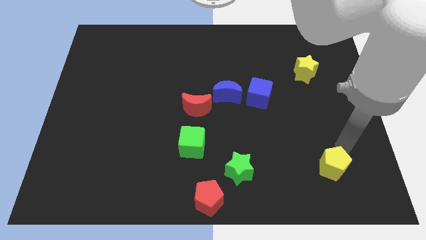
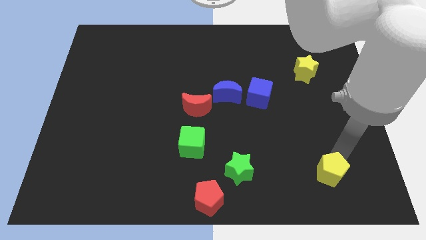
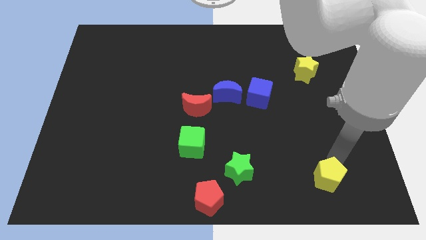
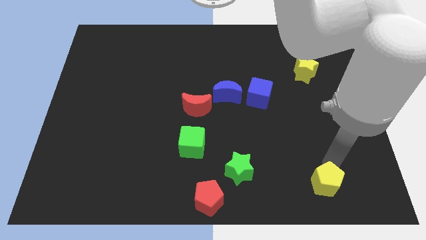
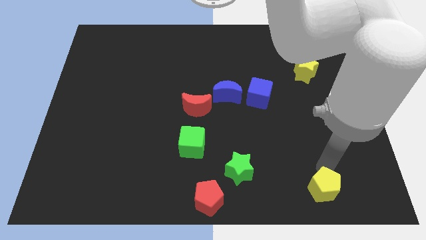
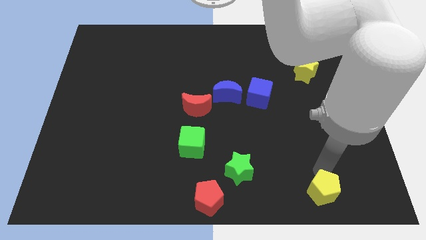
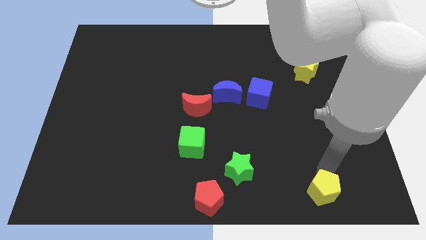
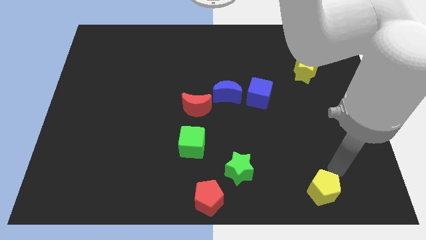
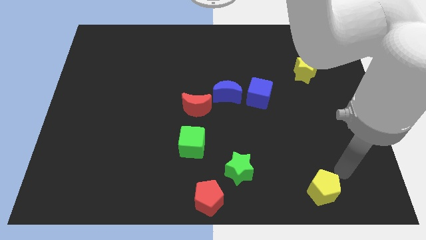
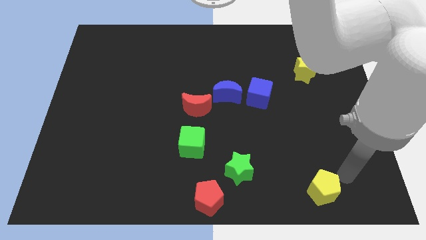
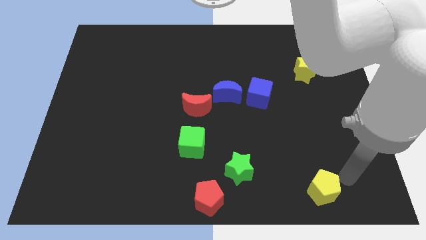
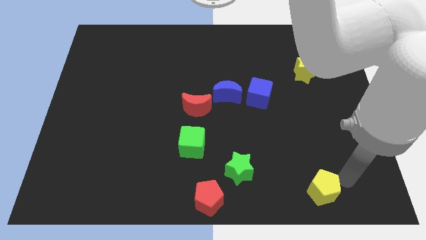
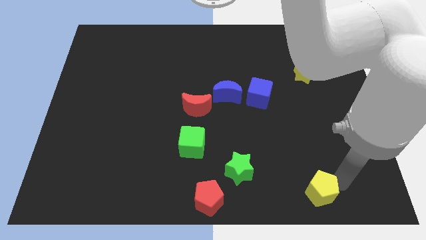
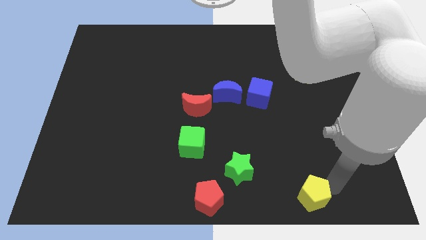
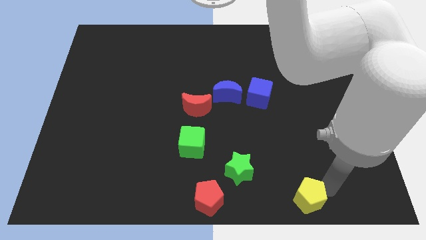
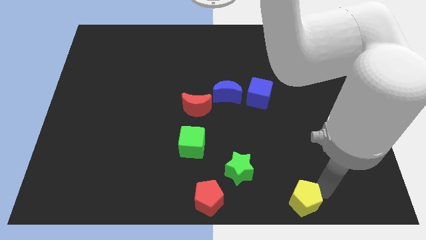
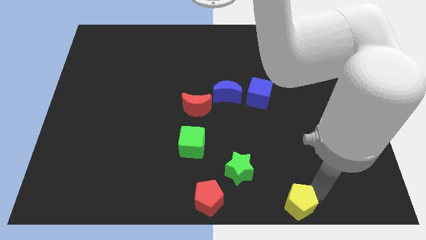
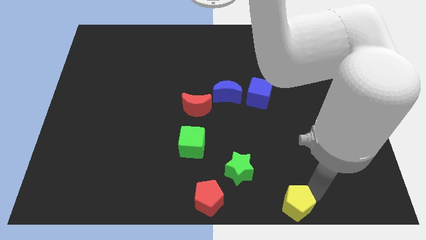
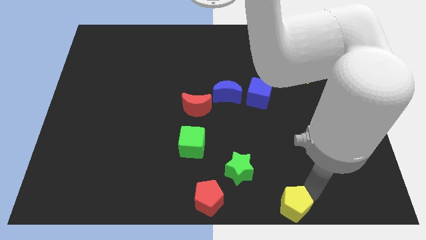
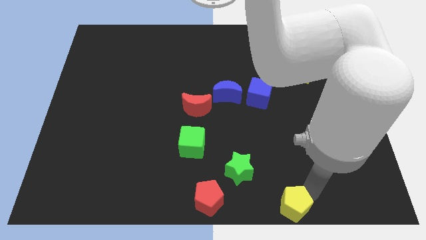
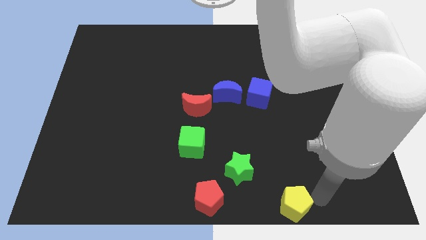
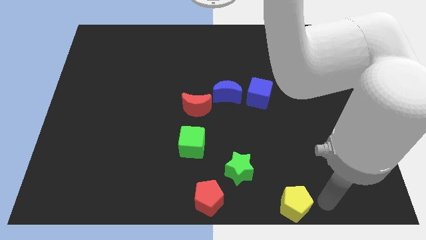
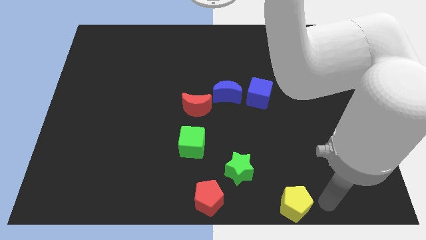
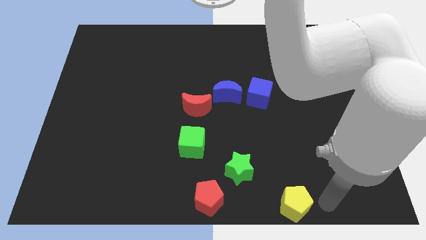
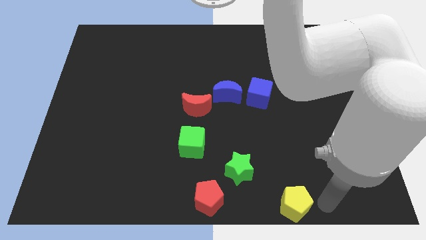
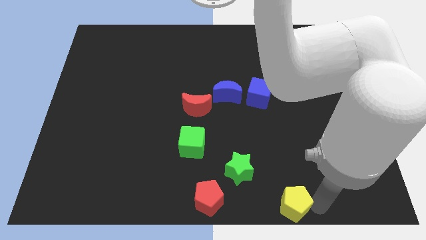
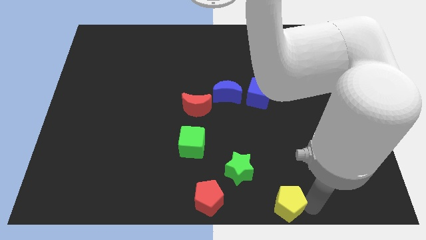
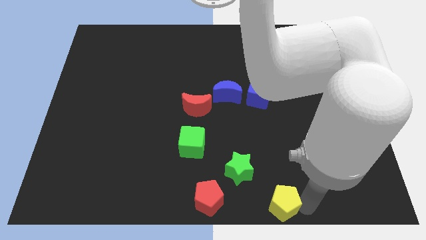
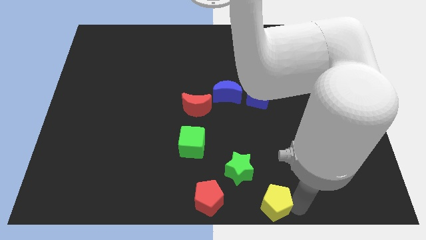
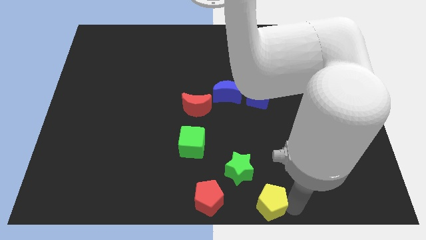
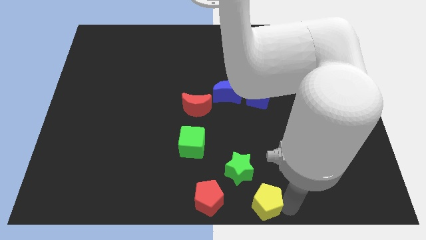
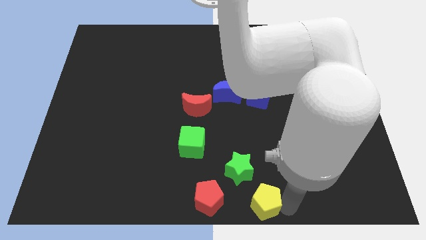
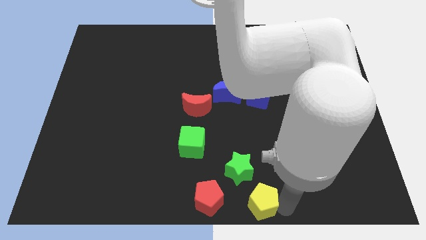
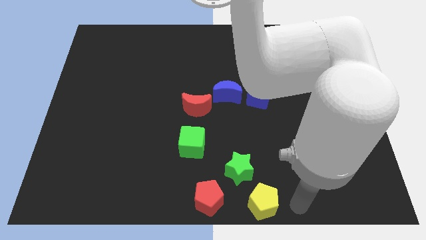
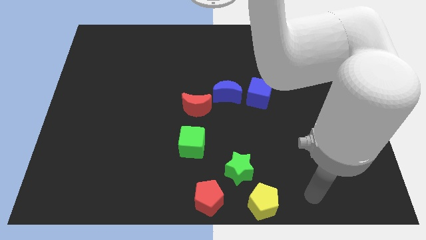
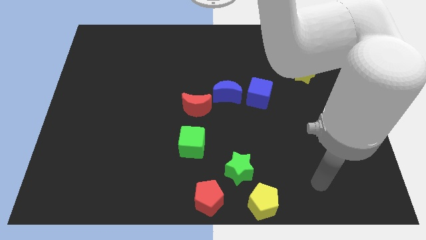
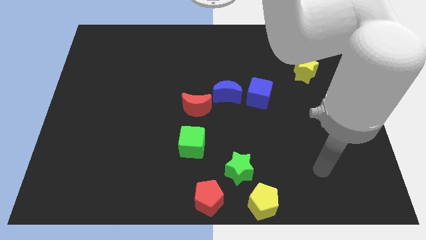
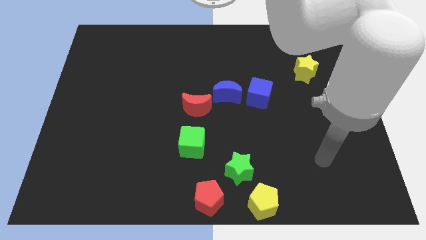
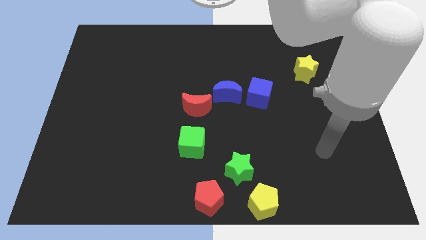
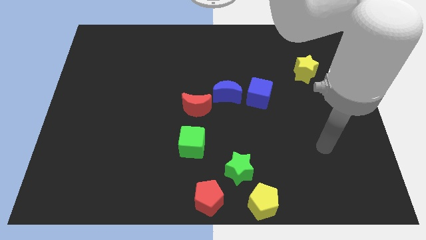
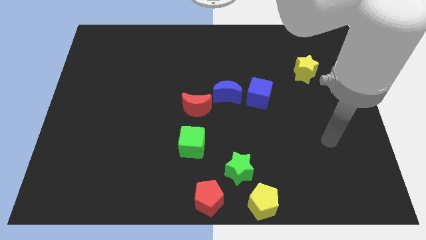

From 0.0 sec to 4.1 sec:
push yellow pentagon towards bottom center

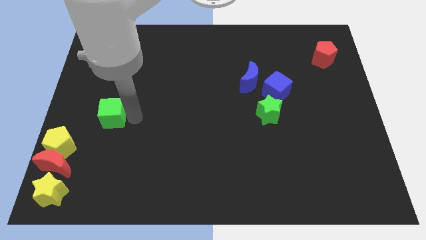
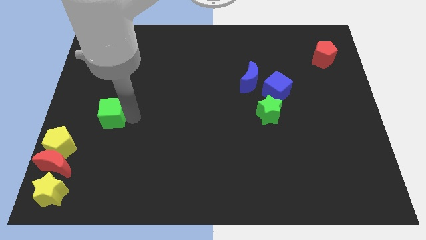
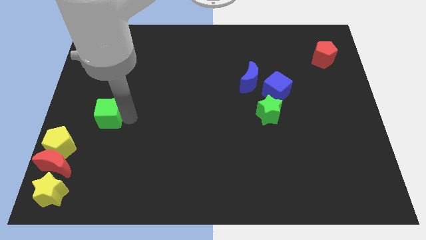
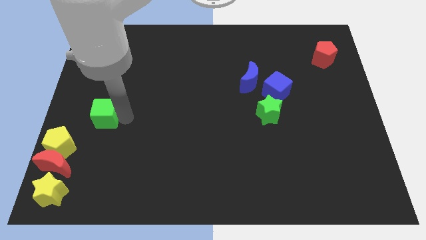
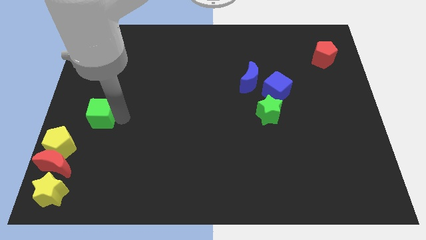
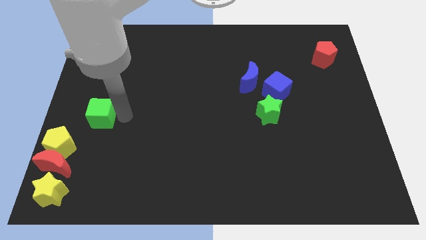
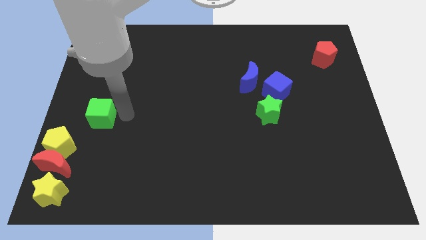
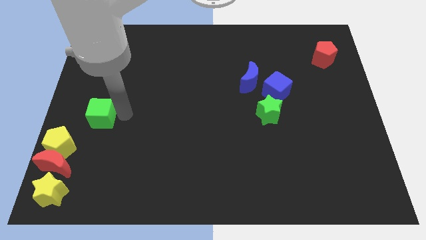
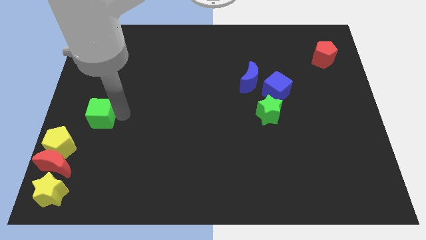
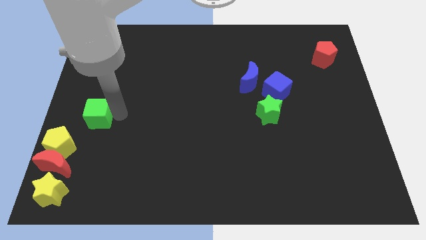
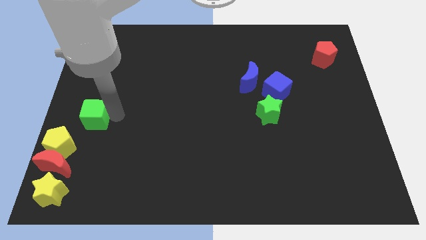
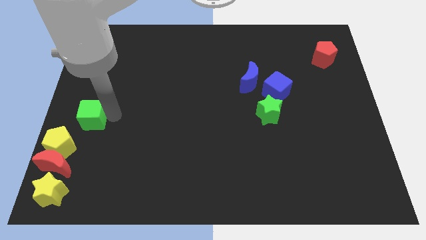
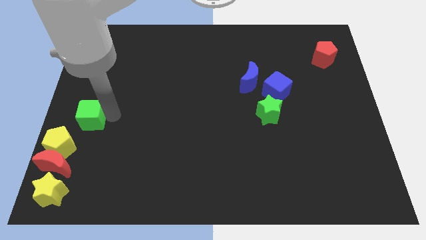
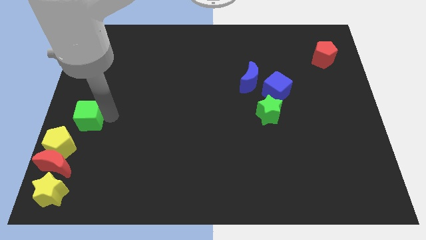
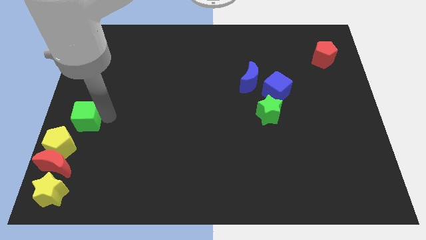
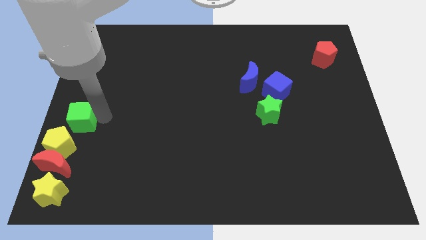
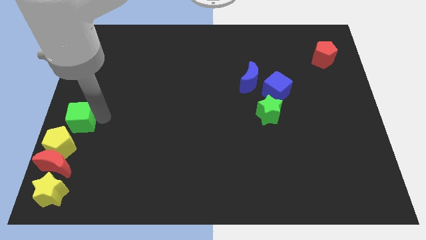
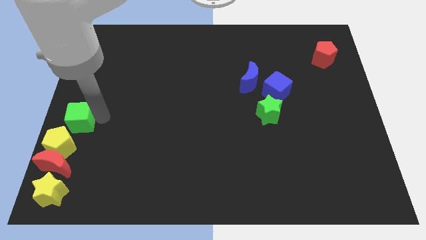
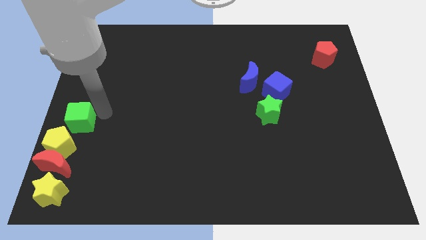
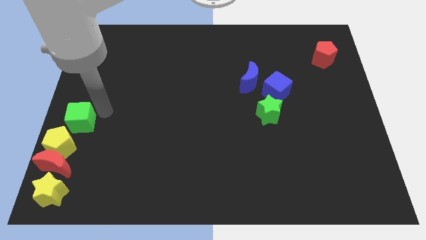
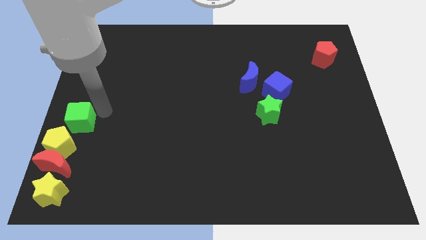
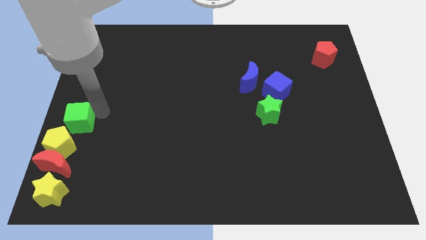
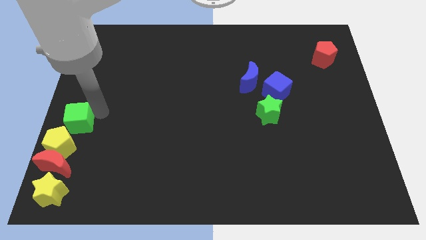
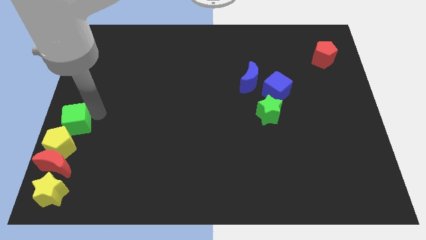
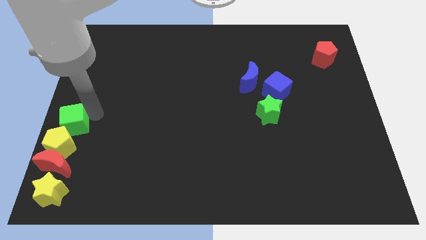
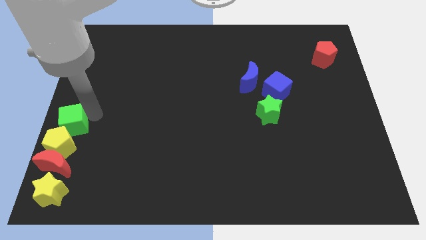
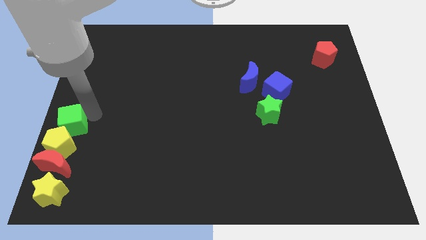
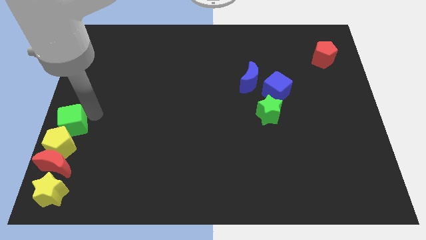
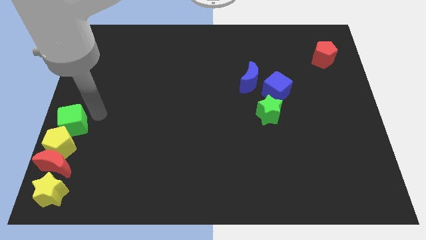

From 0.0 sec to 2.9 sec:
place green cube above yellow pentagon

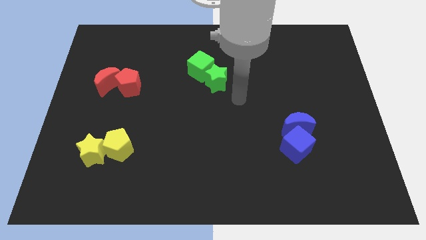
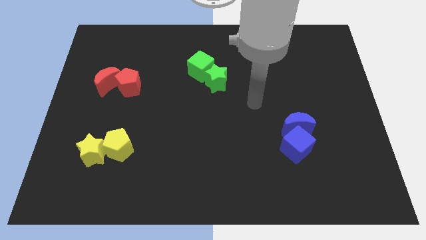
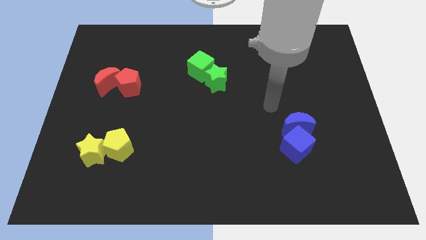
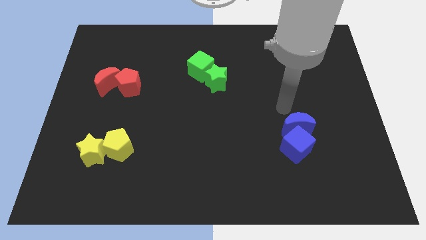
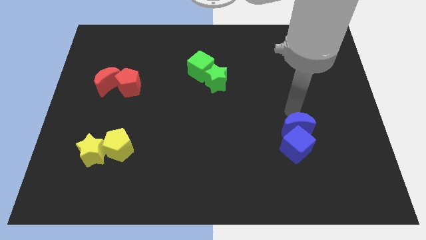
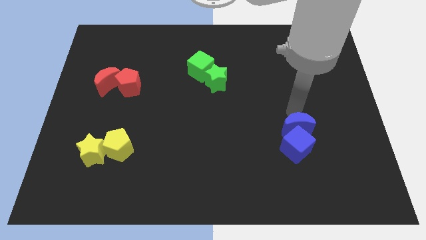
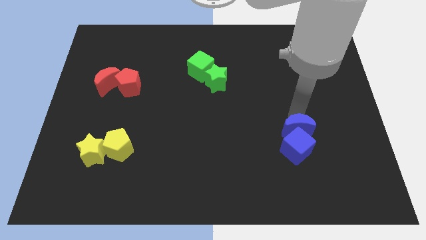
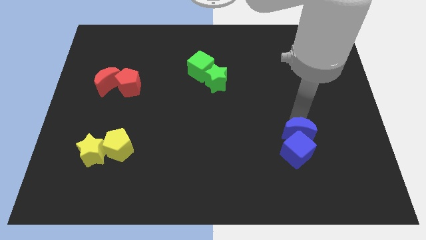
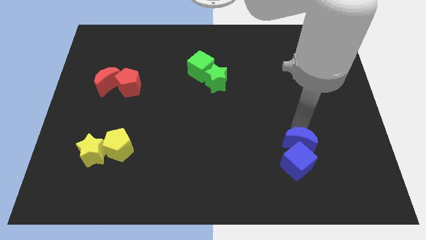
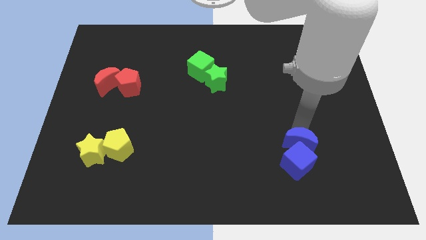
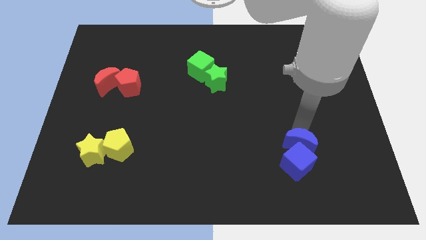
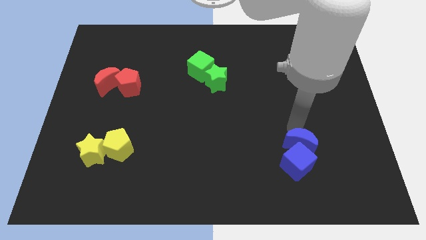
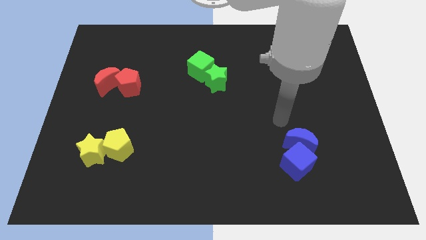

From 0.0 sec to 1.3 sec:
move the blue blocks slightly to the bottom

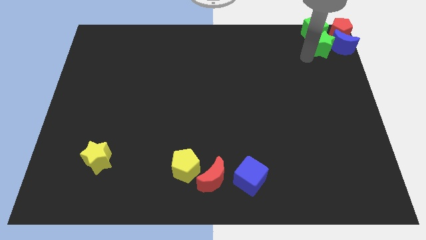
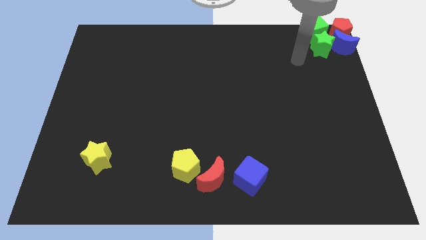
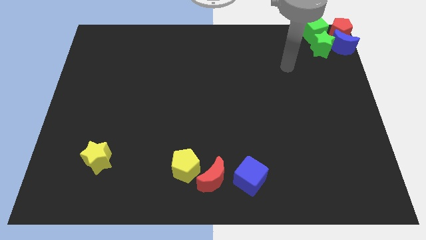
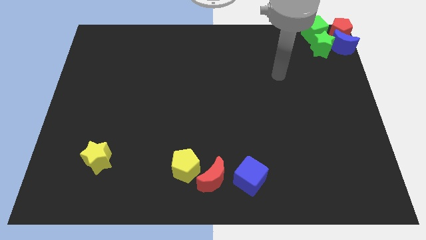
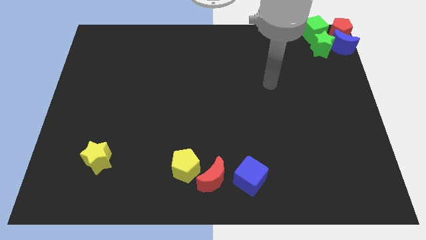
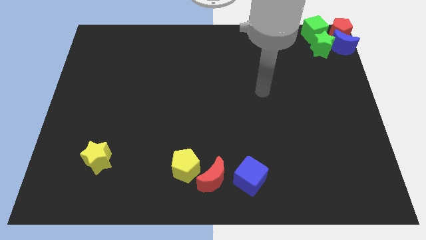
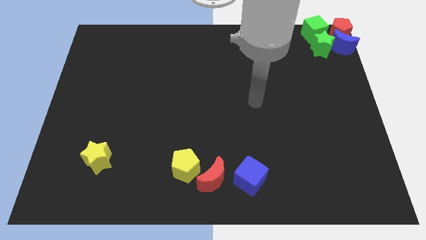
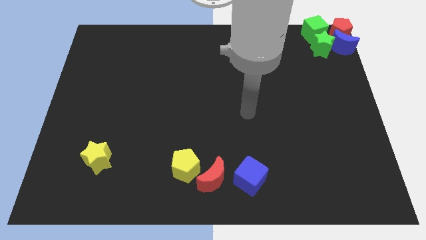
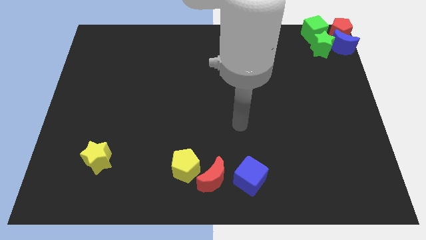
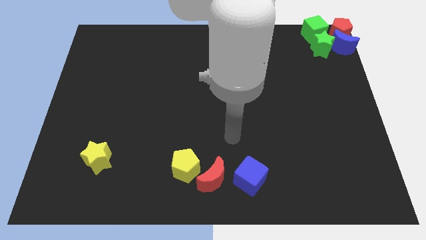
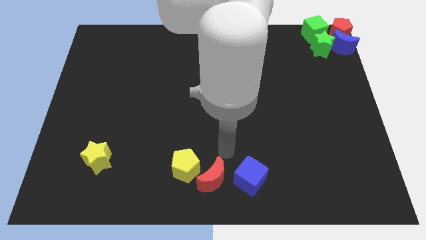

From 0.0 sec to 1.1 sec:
move away from the green star
